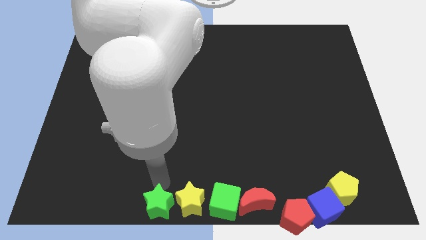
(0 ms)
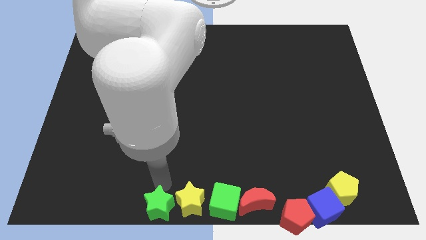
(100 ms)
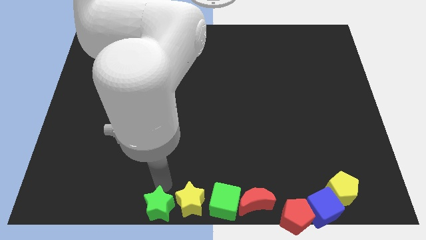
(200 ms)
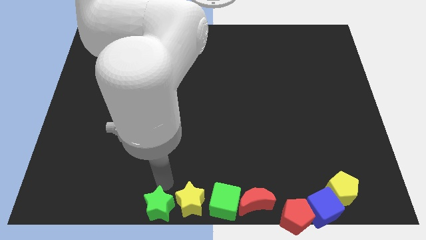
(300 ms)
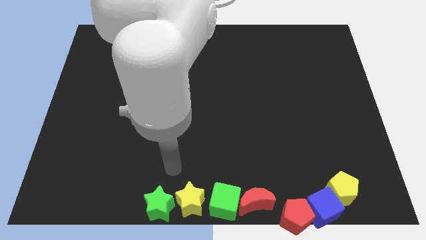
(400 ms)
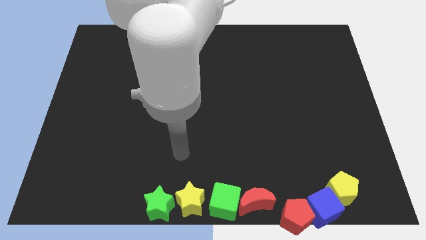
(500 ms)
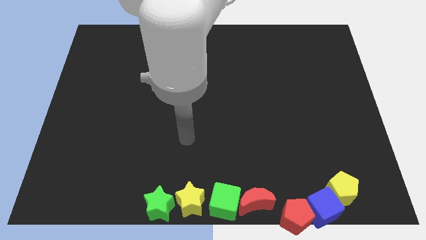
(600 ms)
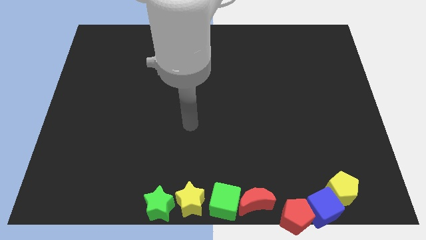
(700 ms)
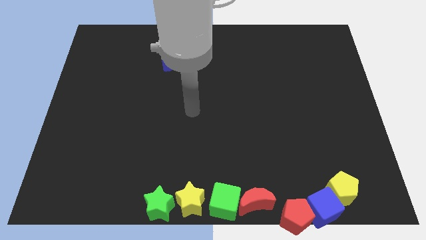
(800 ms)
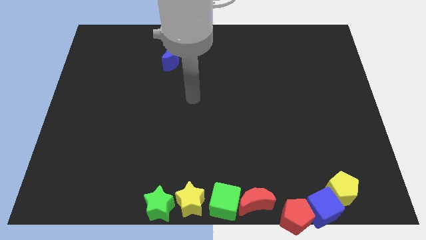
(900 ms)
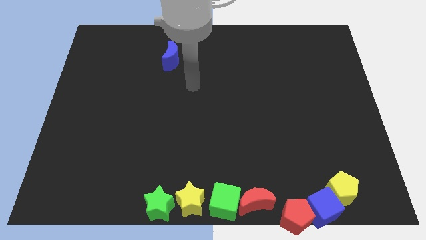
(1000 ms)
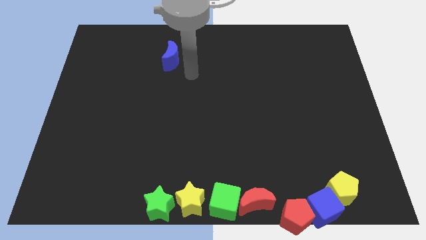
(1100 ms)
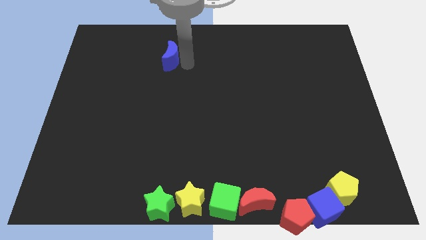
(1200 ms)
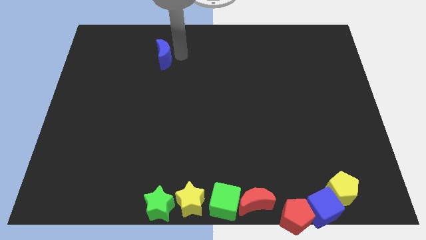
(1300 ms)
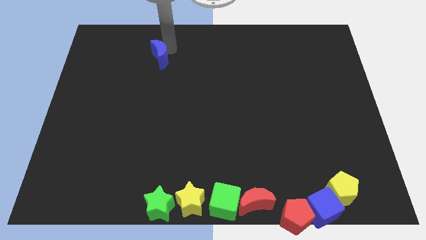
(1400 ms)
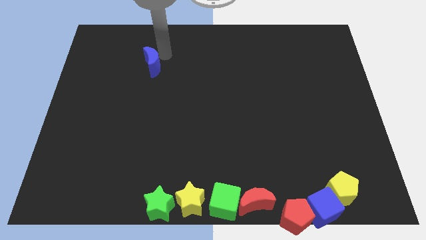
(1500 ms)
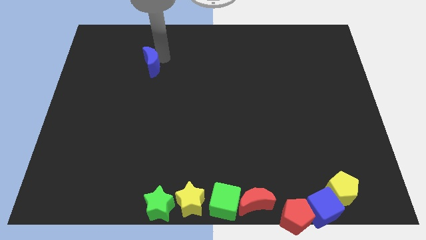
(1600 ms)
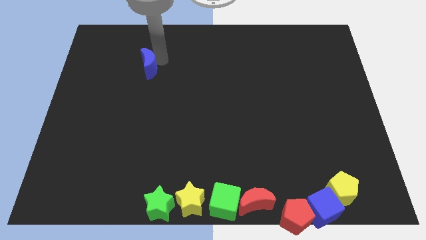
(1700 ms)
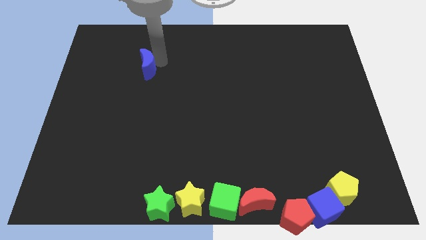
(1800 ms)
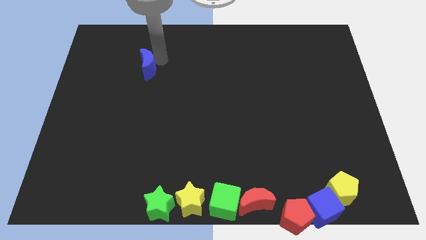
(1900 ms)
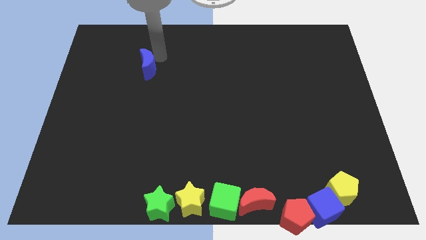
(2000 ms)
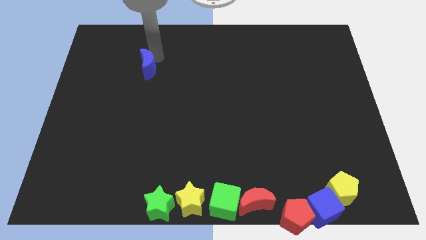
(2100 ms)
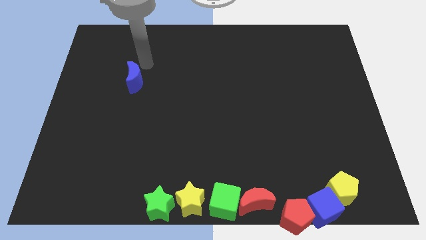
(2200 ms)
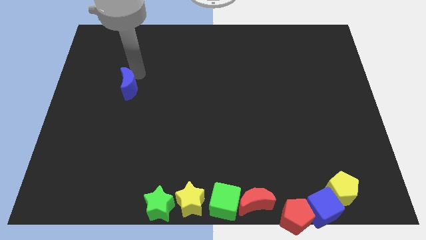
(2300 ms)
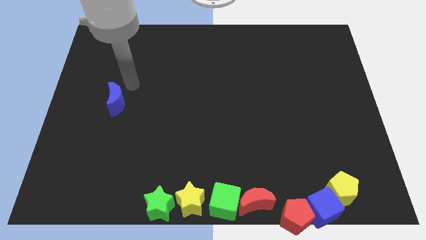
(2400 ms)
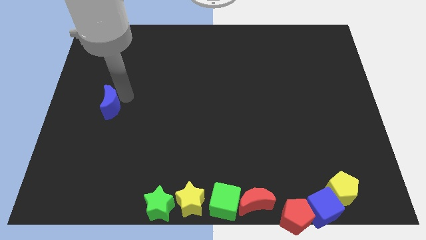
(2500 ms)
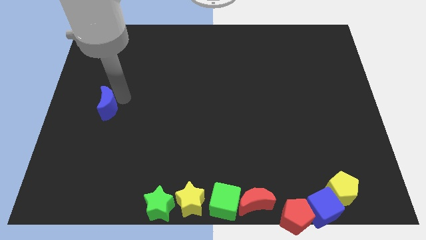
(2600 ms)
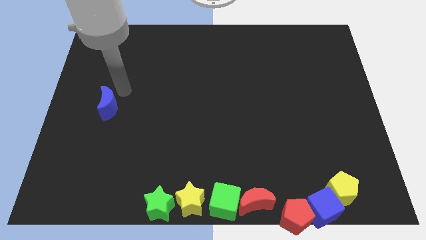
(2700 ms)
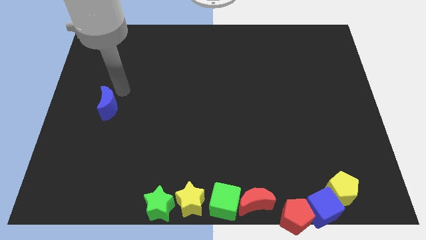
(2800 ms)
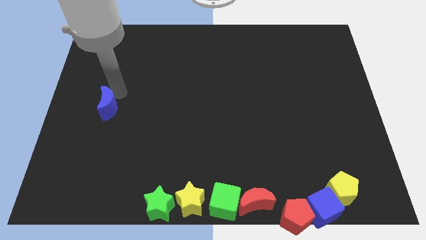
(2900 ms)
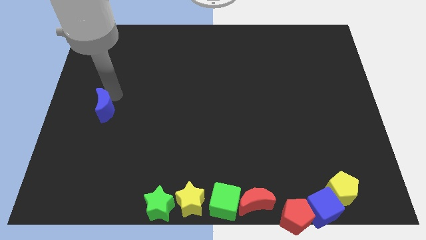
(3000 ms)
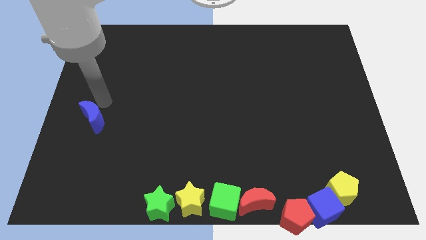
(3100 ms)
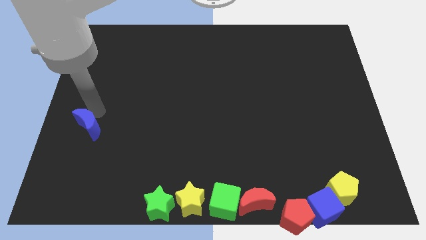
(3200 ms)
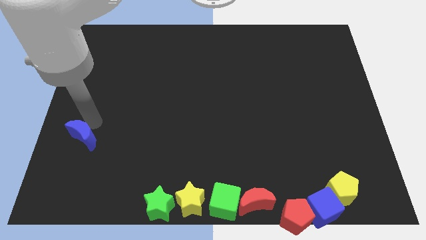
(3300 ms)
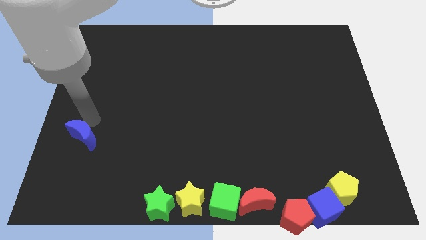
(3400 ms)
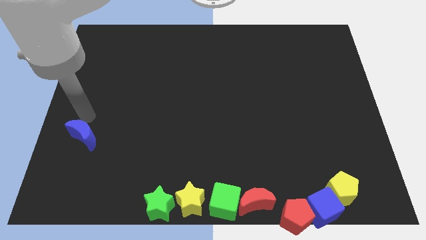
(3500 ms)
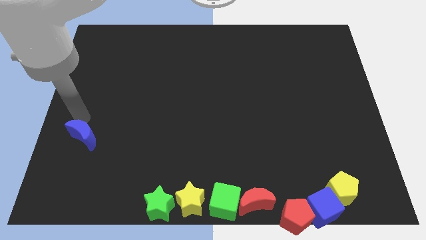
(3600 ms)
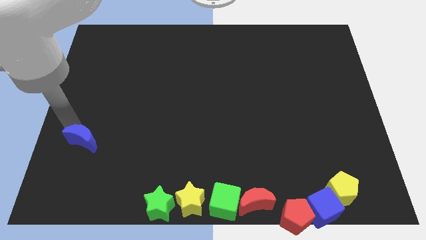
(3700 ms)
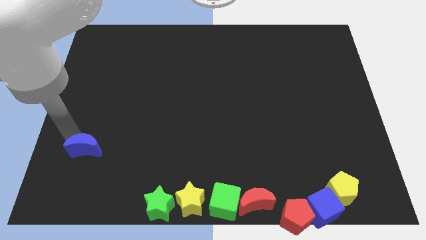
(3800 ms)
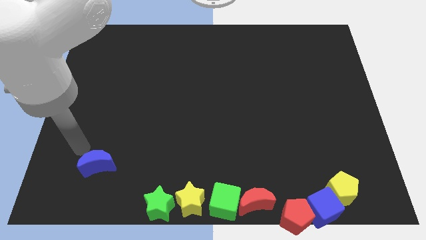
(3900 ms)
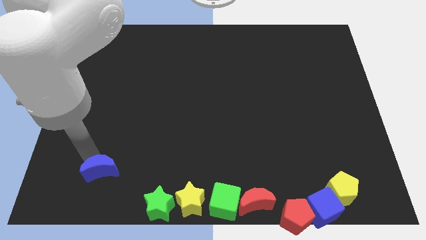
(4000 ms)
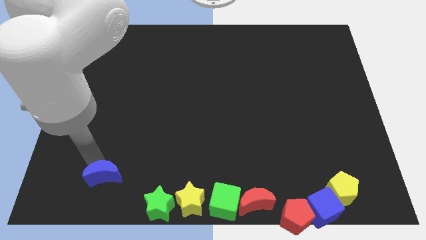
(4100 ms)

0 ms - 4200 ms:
move the blue moon diagonal left above green star

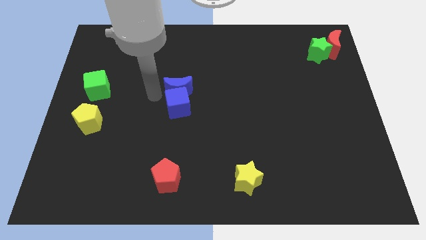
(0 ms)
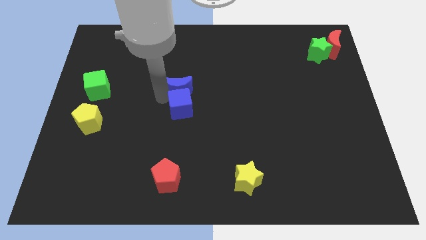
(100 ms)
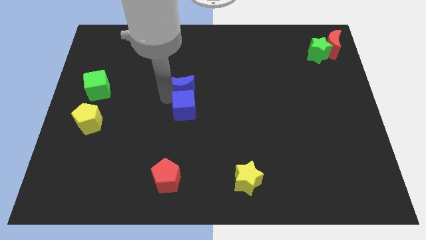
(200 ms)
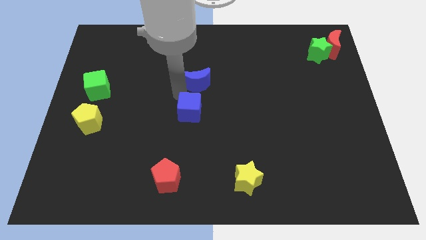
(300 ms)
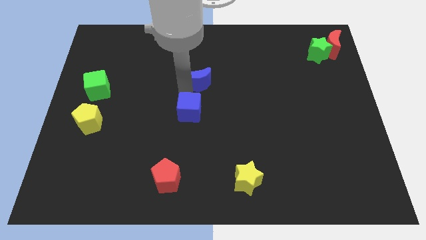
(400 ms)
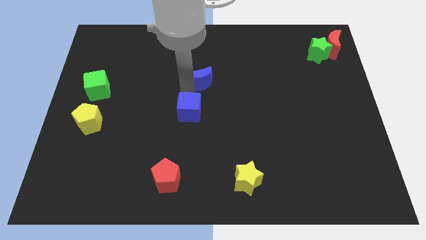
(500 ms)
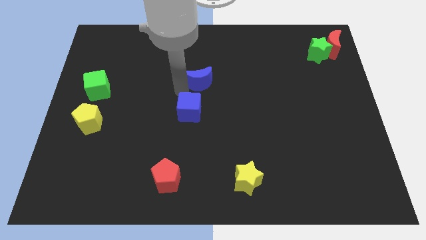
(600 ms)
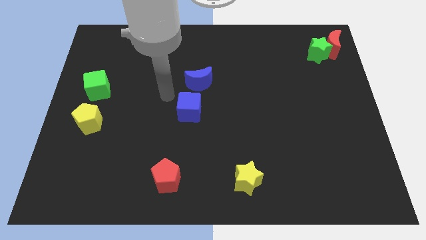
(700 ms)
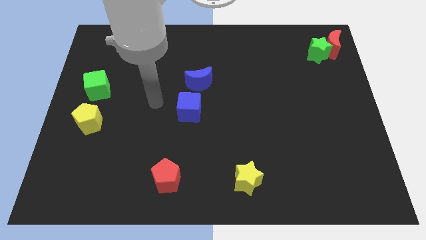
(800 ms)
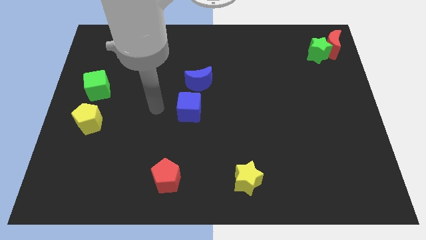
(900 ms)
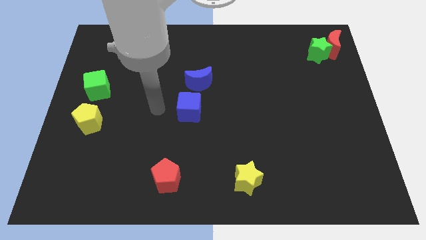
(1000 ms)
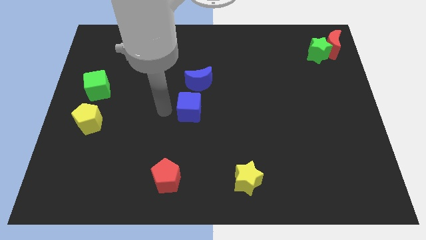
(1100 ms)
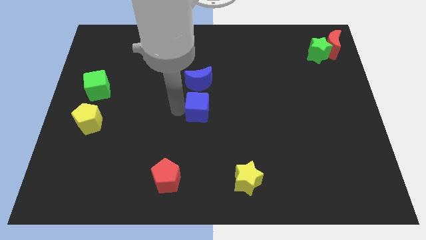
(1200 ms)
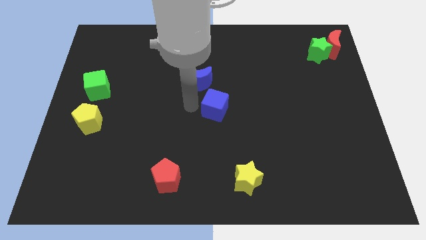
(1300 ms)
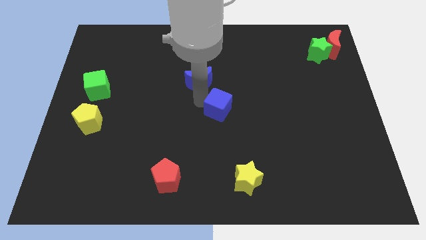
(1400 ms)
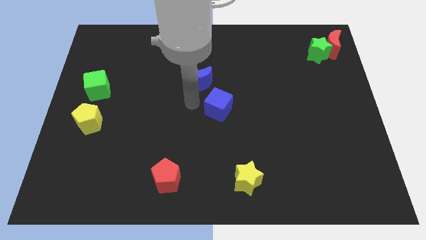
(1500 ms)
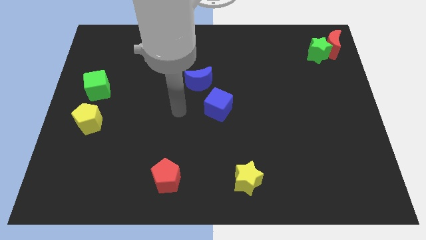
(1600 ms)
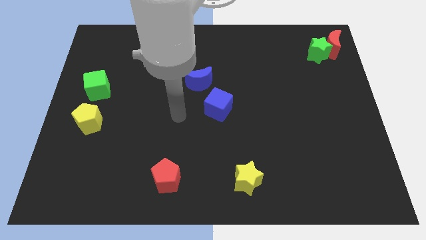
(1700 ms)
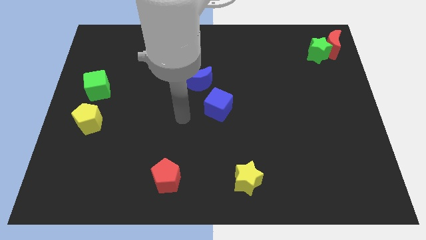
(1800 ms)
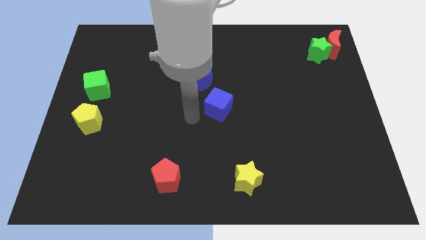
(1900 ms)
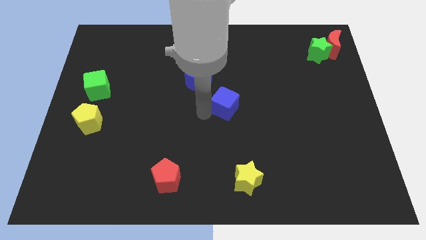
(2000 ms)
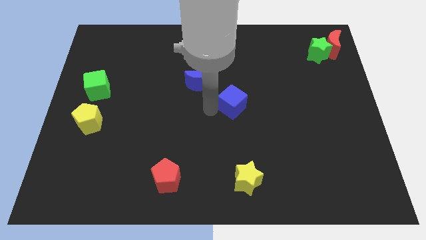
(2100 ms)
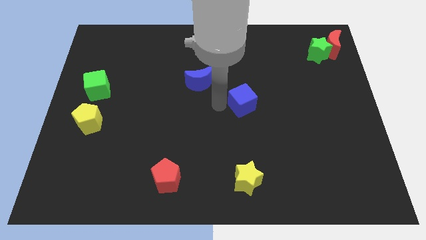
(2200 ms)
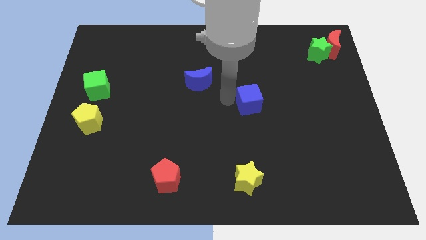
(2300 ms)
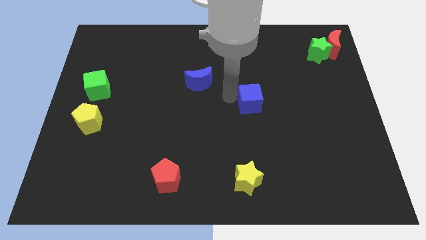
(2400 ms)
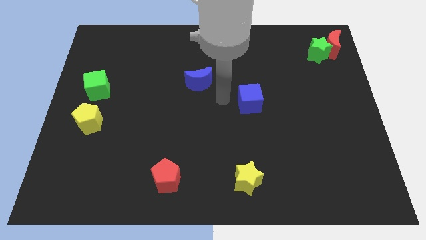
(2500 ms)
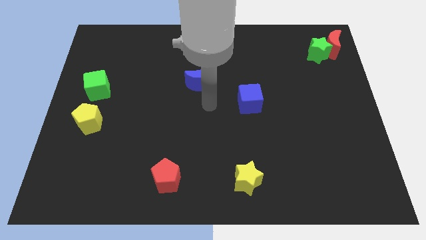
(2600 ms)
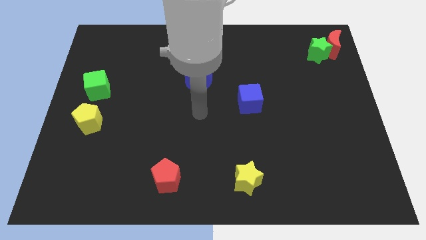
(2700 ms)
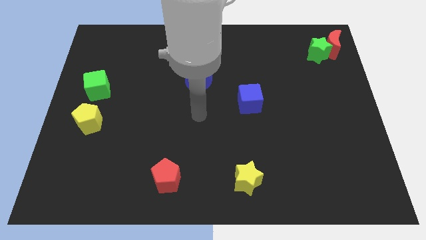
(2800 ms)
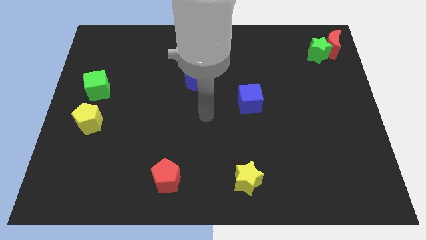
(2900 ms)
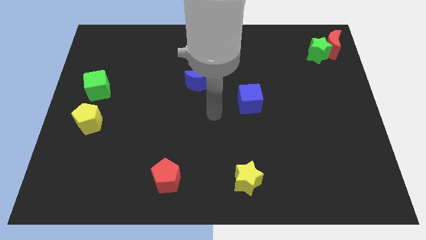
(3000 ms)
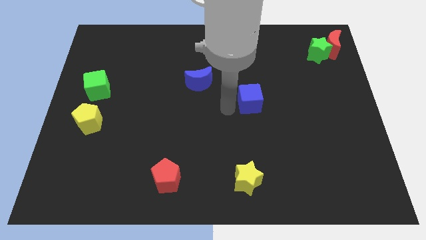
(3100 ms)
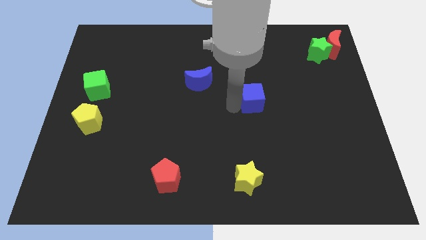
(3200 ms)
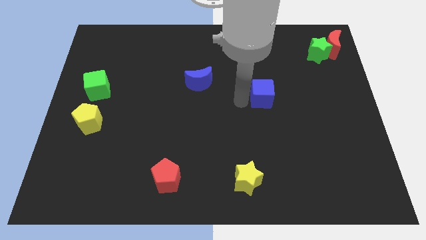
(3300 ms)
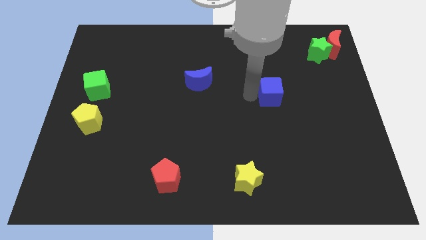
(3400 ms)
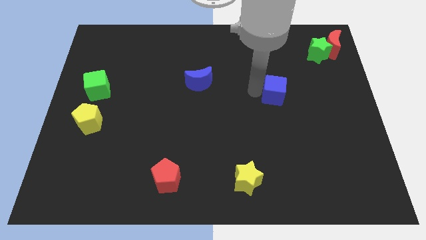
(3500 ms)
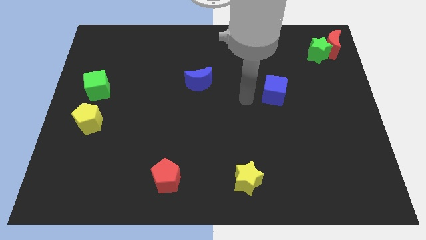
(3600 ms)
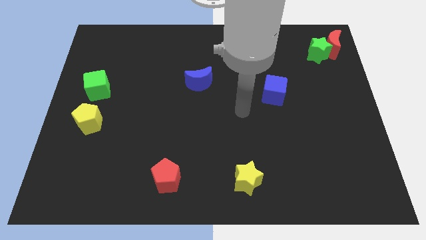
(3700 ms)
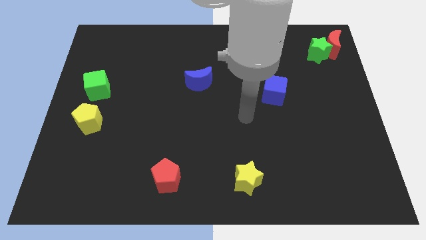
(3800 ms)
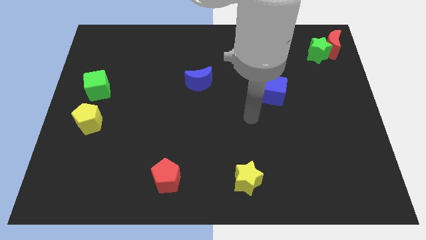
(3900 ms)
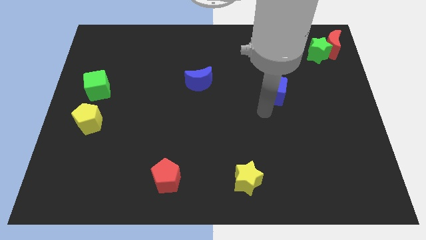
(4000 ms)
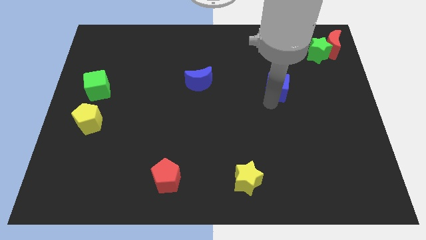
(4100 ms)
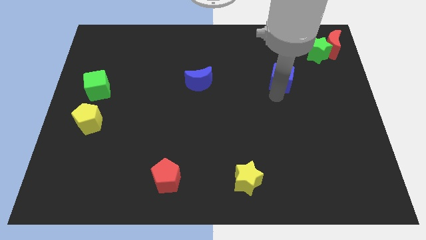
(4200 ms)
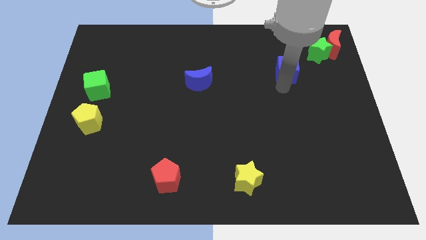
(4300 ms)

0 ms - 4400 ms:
separate the blue cube from the blue crescent

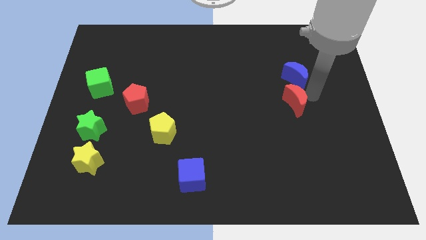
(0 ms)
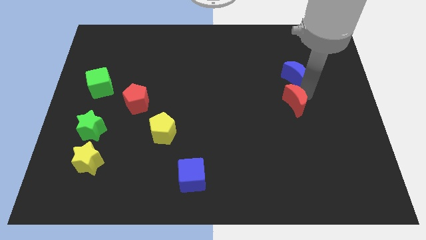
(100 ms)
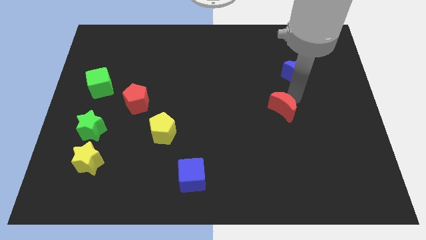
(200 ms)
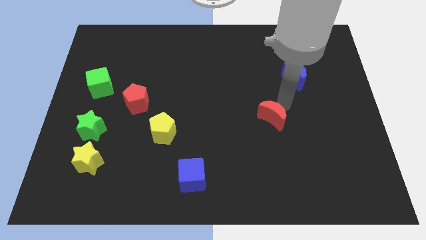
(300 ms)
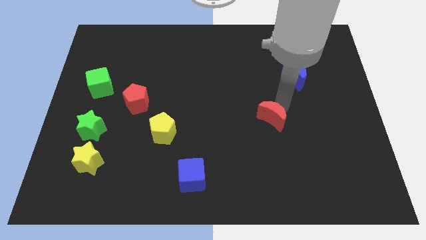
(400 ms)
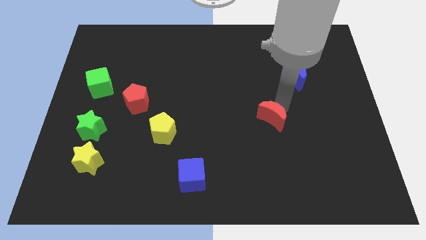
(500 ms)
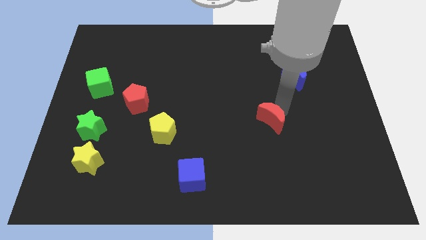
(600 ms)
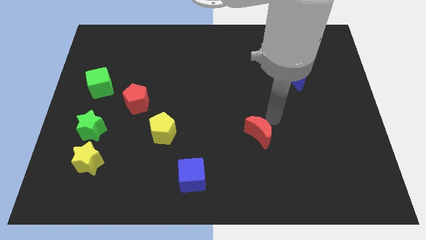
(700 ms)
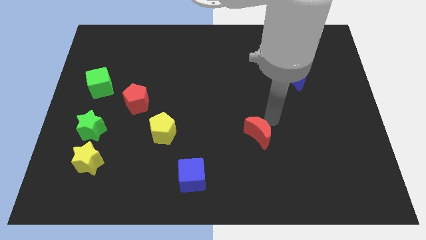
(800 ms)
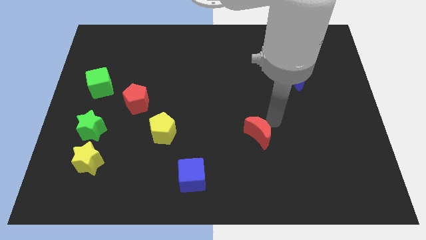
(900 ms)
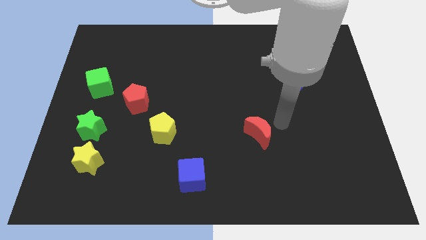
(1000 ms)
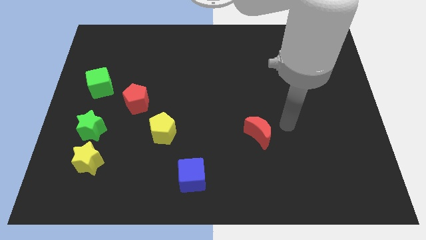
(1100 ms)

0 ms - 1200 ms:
push the red moon away from the blue moon
